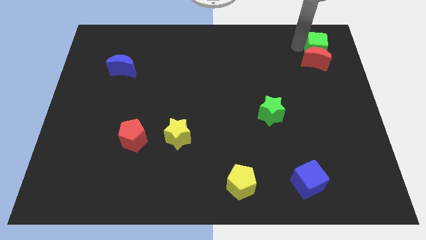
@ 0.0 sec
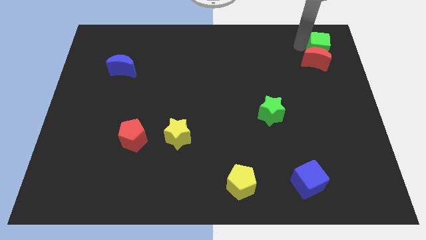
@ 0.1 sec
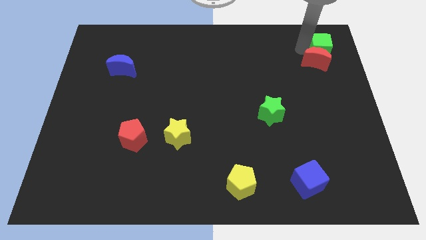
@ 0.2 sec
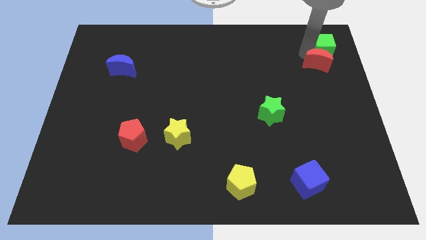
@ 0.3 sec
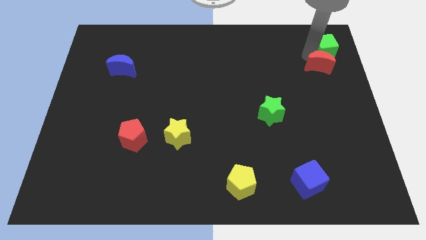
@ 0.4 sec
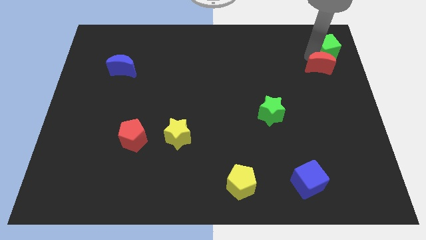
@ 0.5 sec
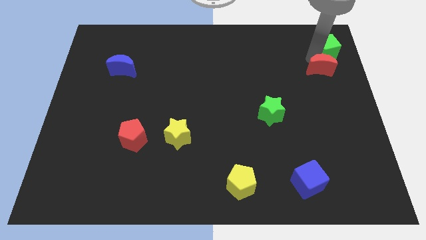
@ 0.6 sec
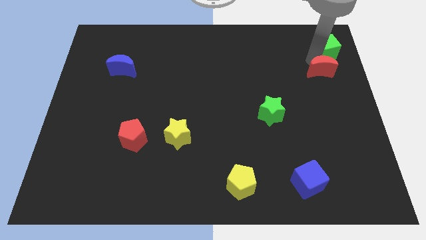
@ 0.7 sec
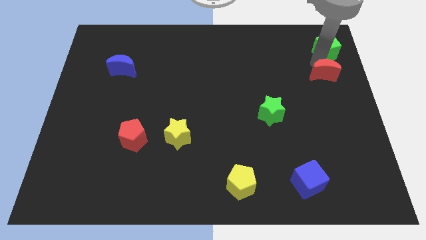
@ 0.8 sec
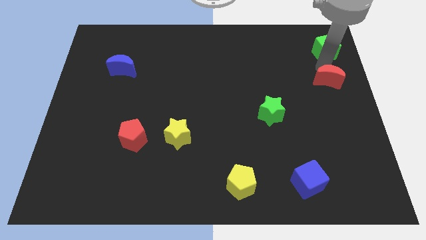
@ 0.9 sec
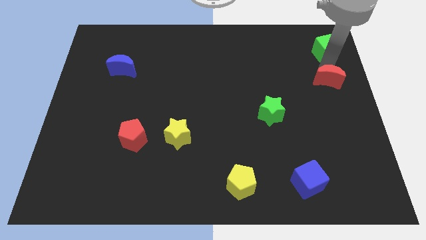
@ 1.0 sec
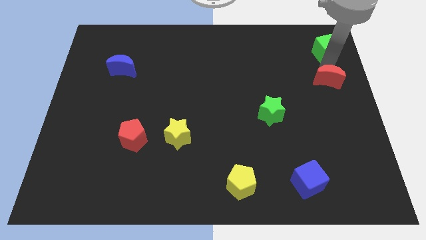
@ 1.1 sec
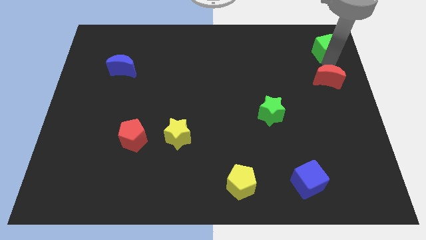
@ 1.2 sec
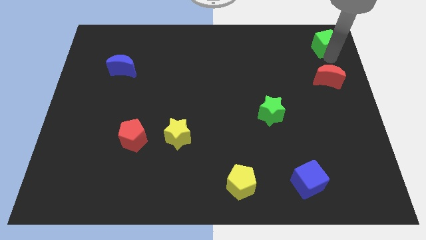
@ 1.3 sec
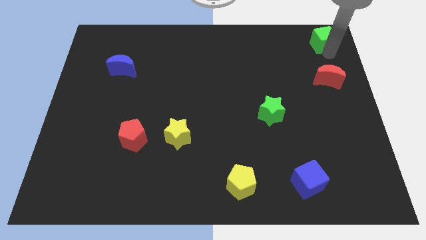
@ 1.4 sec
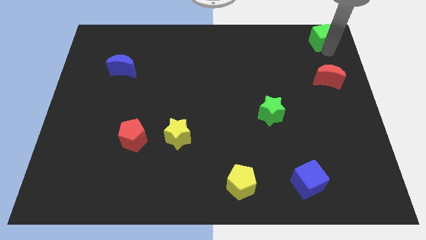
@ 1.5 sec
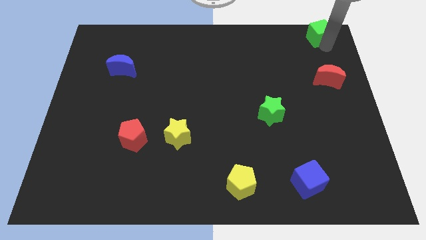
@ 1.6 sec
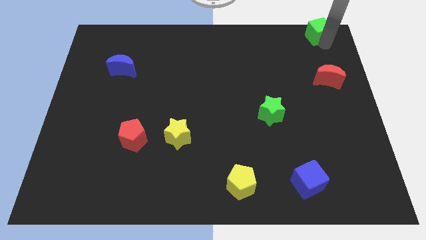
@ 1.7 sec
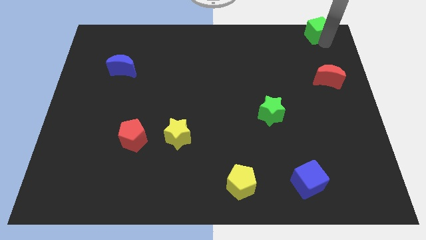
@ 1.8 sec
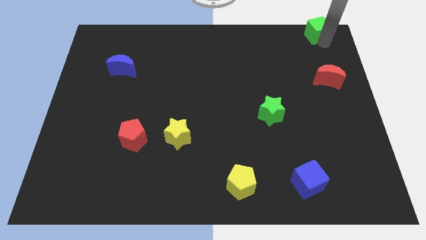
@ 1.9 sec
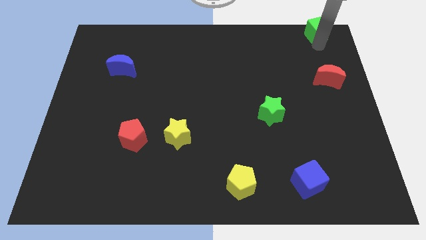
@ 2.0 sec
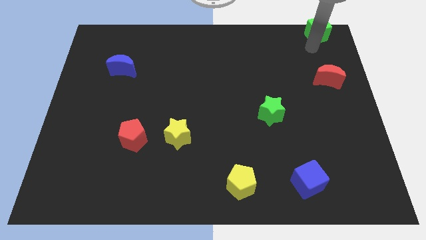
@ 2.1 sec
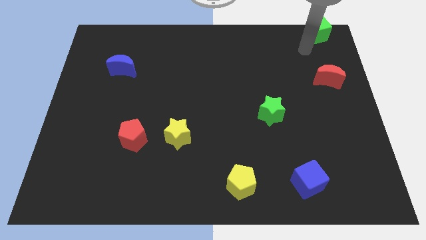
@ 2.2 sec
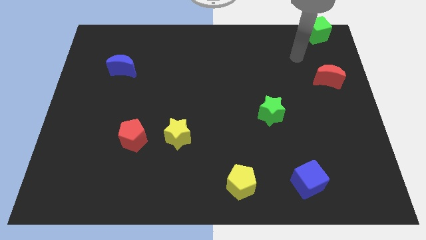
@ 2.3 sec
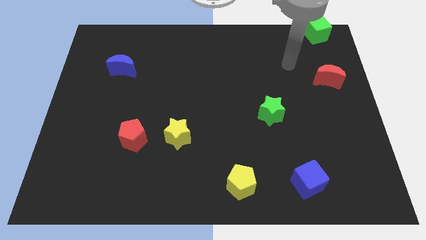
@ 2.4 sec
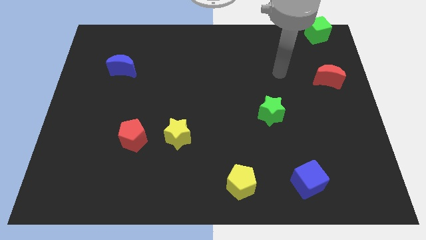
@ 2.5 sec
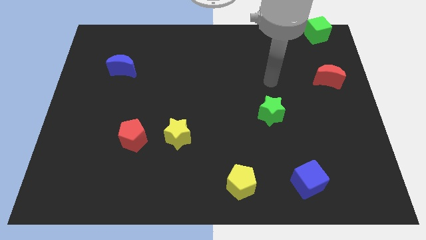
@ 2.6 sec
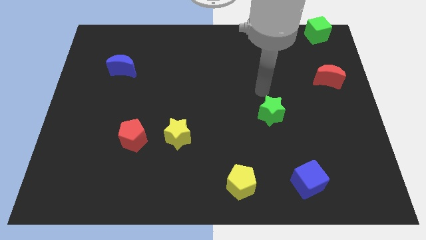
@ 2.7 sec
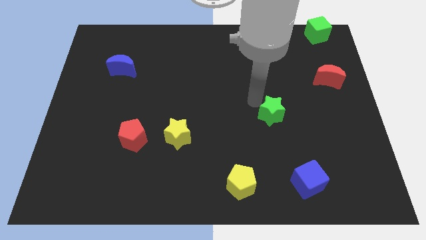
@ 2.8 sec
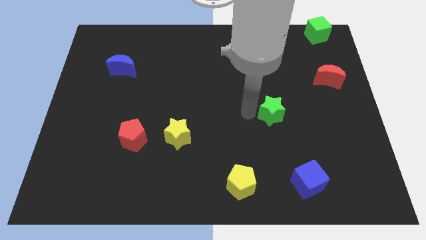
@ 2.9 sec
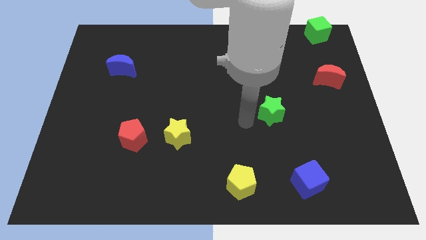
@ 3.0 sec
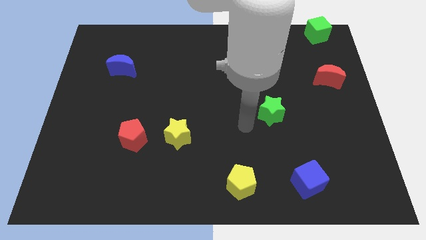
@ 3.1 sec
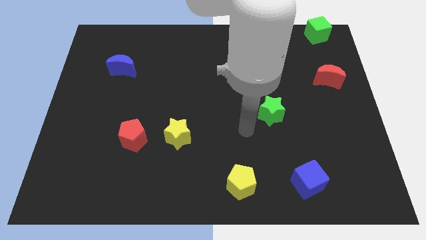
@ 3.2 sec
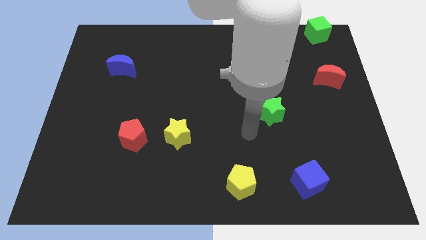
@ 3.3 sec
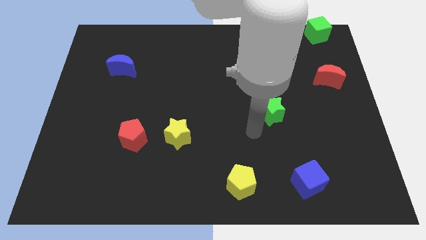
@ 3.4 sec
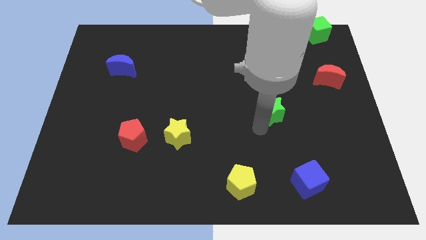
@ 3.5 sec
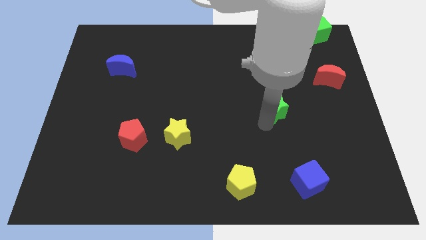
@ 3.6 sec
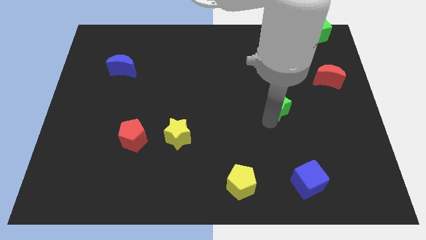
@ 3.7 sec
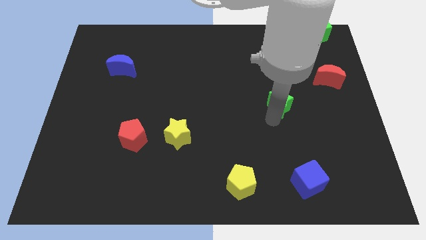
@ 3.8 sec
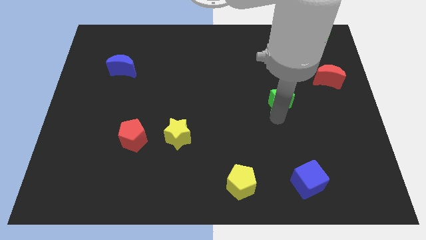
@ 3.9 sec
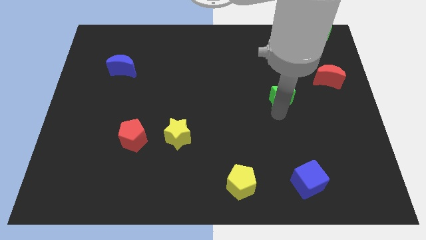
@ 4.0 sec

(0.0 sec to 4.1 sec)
move the green star diagonally to the red moon

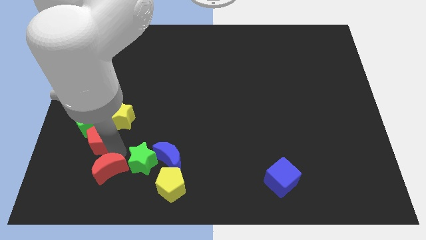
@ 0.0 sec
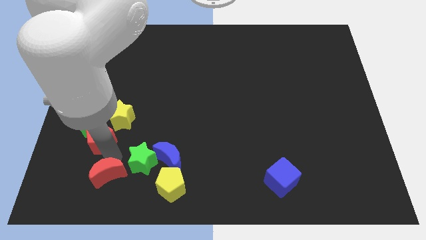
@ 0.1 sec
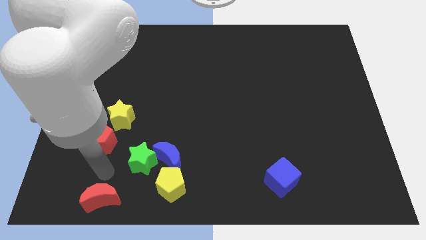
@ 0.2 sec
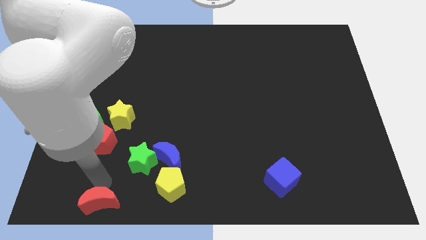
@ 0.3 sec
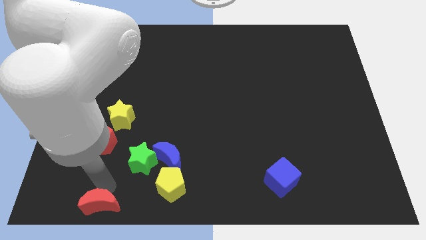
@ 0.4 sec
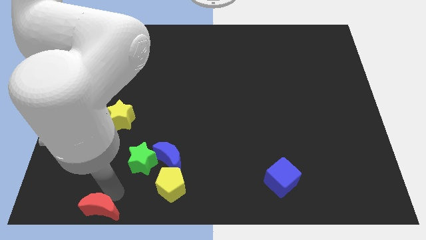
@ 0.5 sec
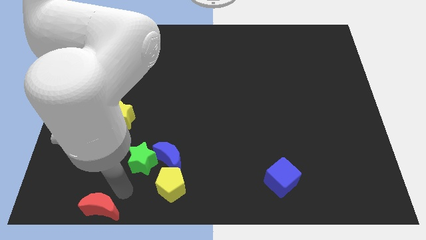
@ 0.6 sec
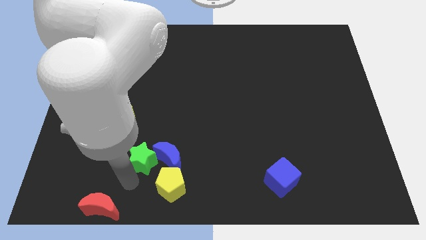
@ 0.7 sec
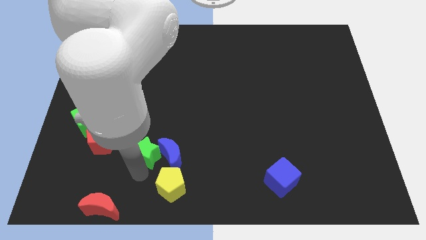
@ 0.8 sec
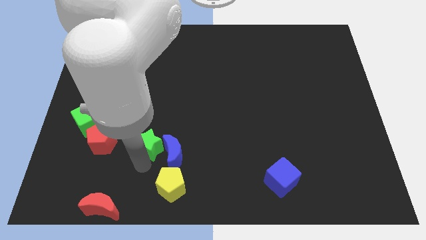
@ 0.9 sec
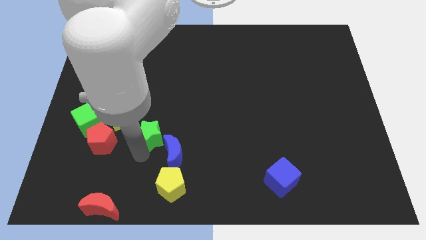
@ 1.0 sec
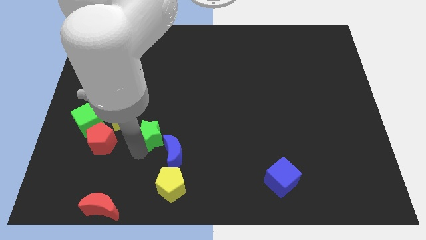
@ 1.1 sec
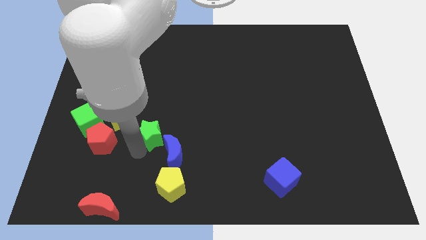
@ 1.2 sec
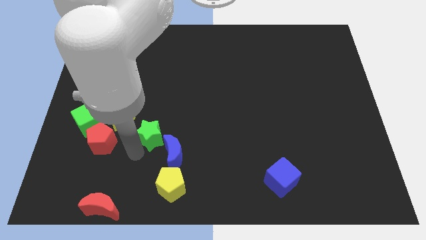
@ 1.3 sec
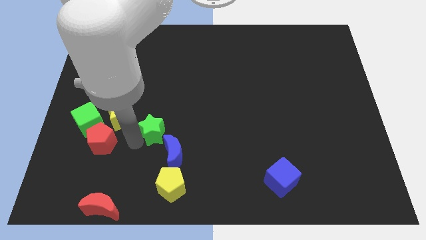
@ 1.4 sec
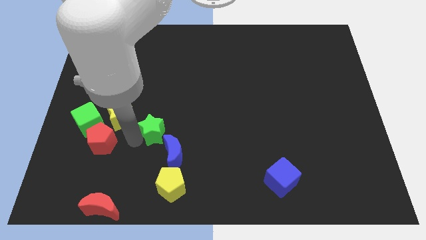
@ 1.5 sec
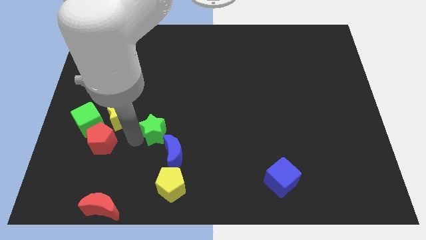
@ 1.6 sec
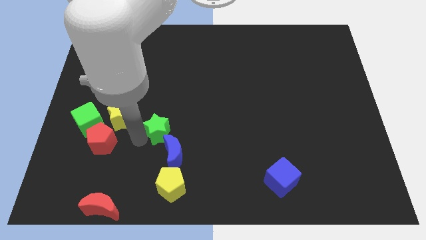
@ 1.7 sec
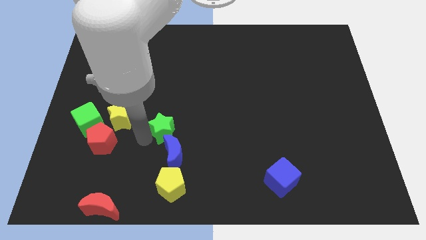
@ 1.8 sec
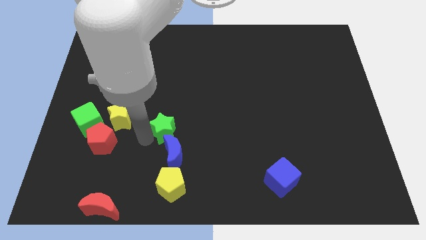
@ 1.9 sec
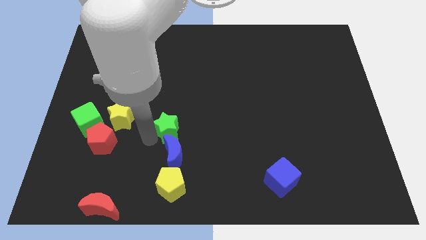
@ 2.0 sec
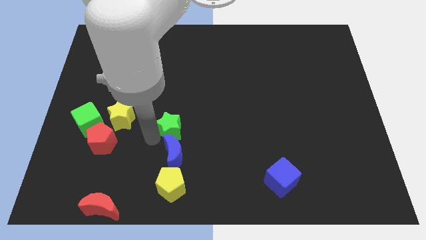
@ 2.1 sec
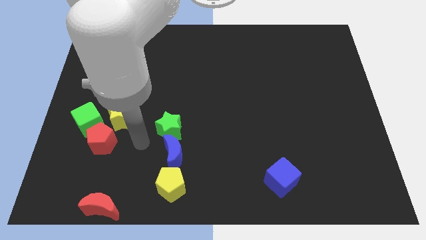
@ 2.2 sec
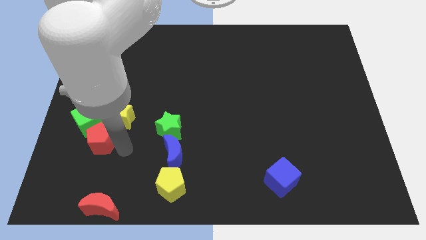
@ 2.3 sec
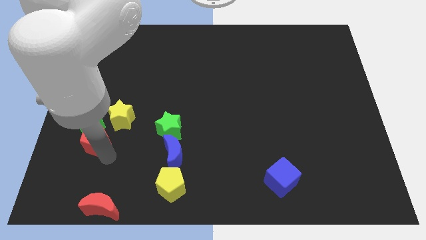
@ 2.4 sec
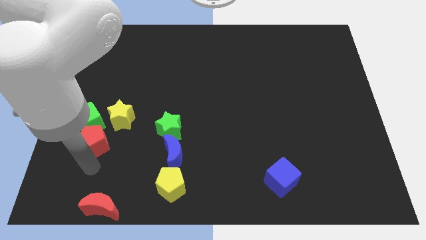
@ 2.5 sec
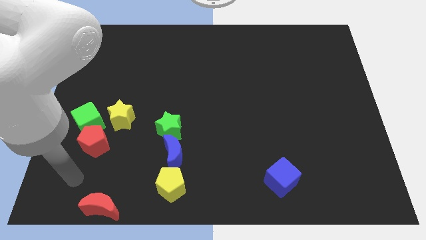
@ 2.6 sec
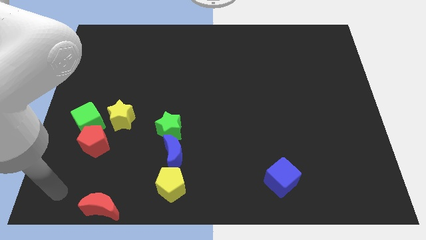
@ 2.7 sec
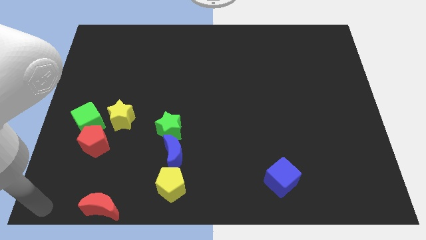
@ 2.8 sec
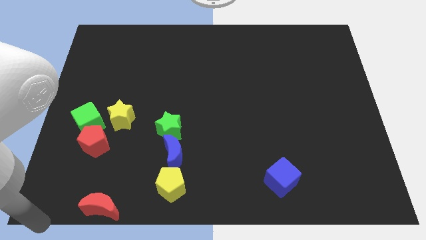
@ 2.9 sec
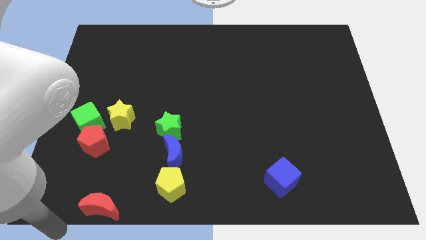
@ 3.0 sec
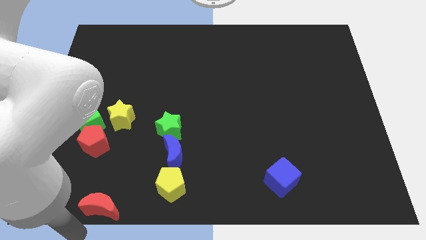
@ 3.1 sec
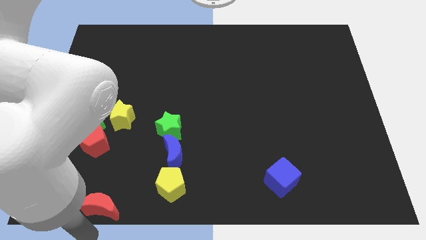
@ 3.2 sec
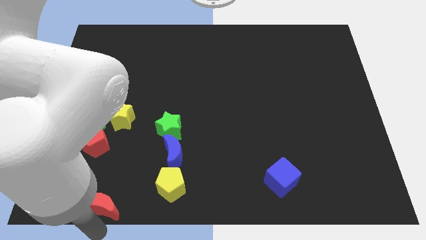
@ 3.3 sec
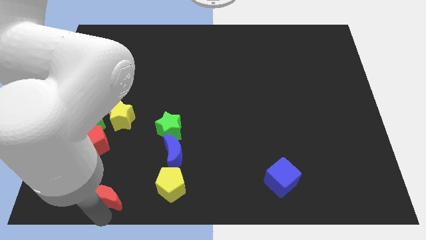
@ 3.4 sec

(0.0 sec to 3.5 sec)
push the green star to the top of the blue crescent

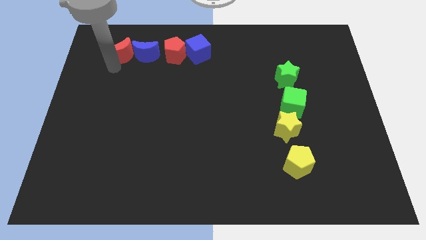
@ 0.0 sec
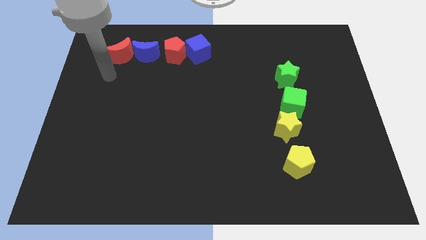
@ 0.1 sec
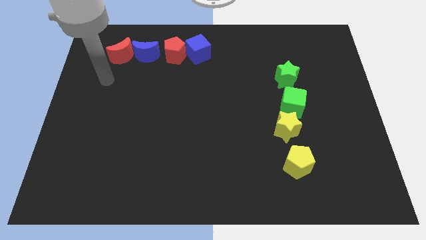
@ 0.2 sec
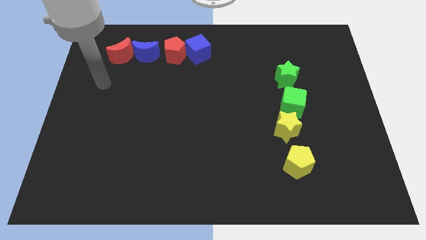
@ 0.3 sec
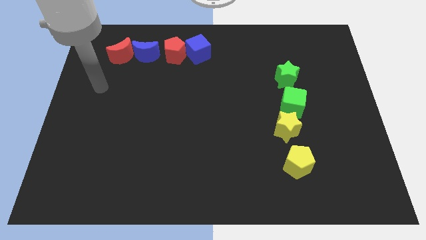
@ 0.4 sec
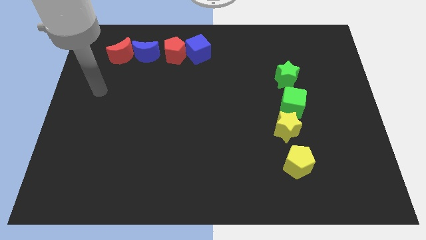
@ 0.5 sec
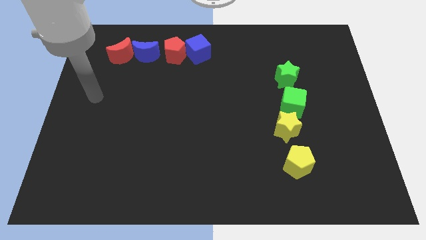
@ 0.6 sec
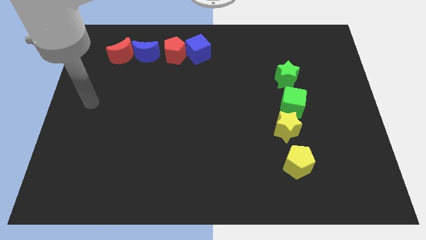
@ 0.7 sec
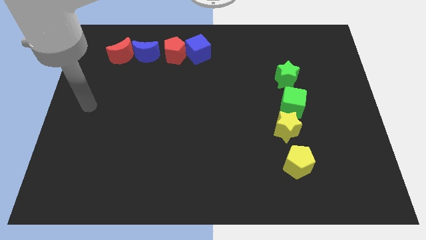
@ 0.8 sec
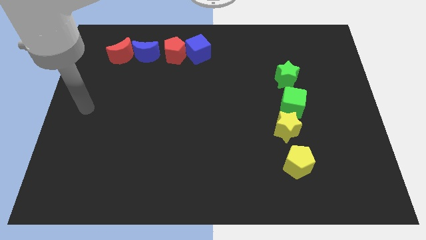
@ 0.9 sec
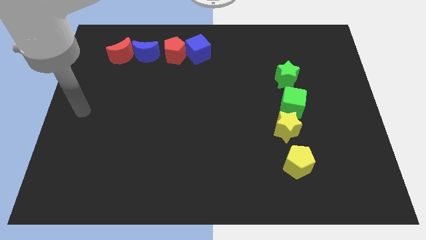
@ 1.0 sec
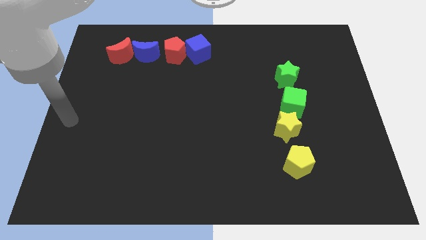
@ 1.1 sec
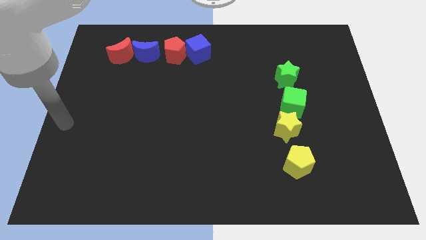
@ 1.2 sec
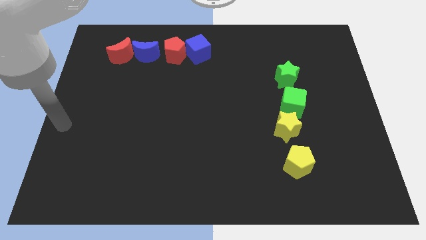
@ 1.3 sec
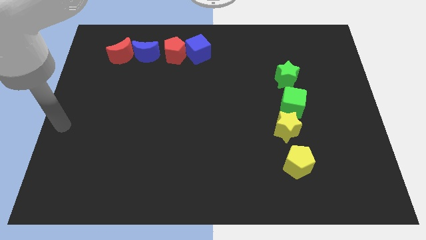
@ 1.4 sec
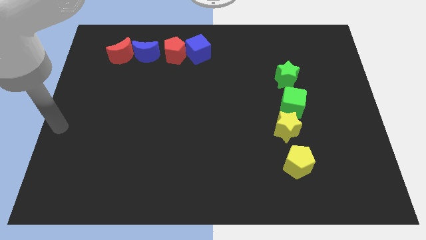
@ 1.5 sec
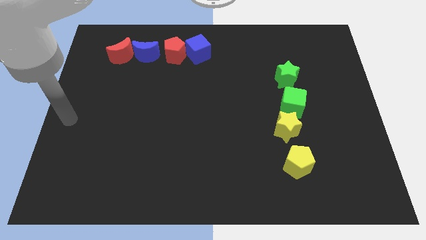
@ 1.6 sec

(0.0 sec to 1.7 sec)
place the arm at the center left of the board
